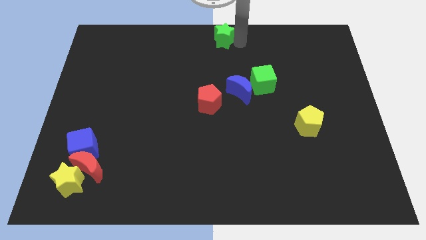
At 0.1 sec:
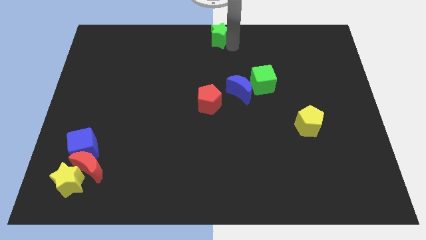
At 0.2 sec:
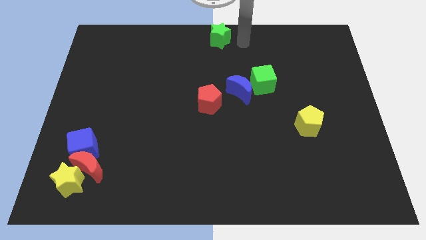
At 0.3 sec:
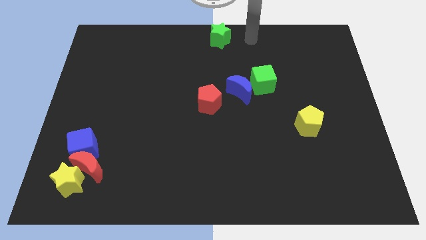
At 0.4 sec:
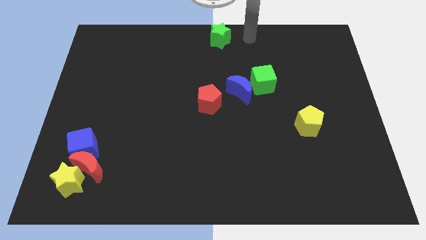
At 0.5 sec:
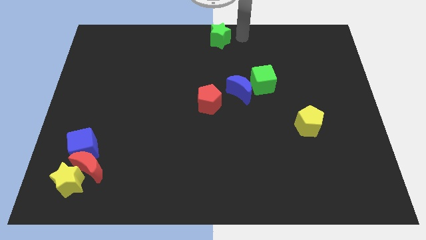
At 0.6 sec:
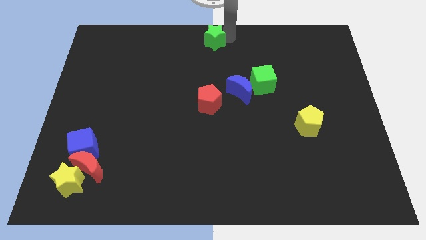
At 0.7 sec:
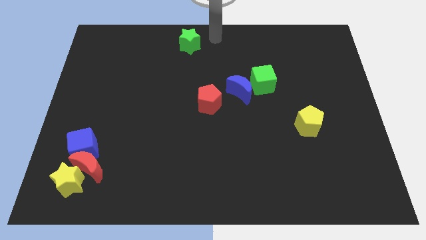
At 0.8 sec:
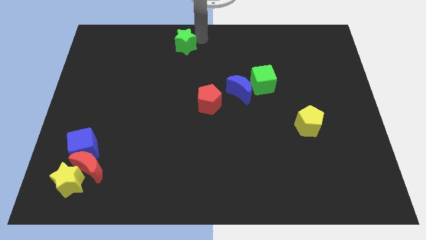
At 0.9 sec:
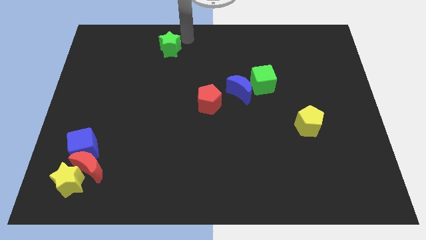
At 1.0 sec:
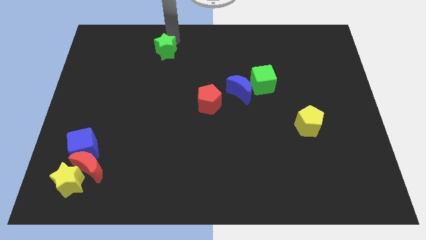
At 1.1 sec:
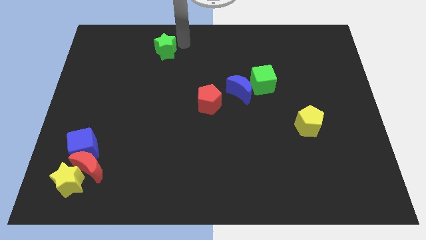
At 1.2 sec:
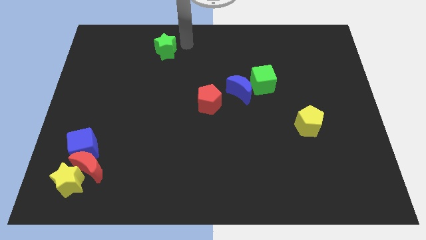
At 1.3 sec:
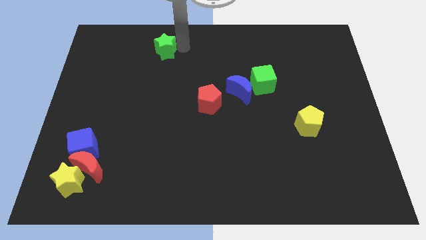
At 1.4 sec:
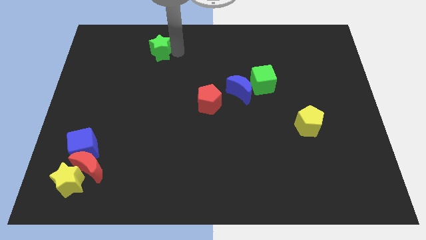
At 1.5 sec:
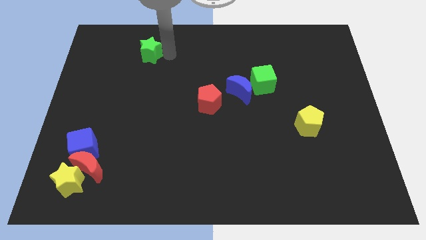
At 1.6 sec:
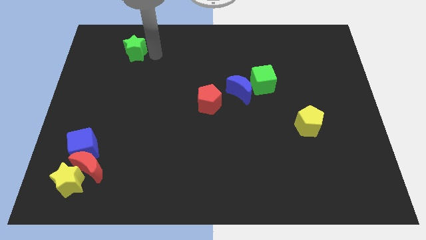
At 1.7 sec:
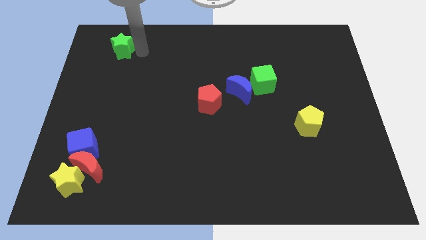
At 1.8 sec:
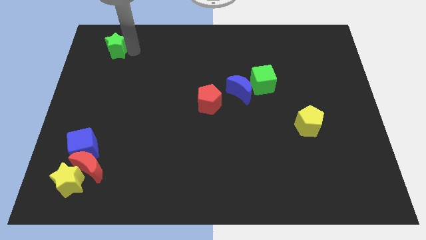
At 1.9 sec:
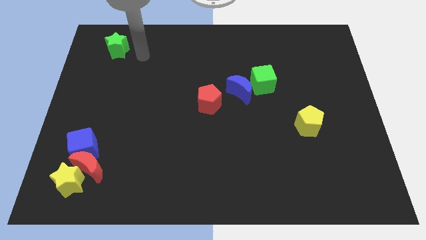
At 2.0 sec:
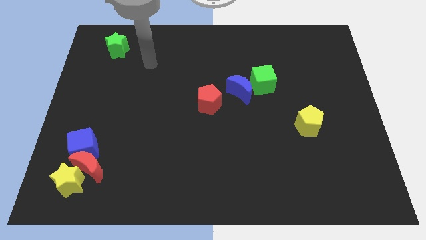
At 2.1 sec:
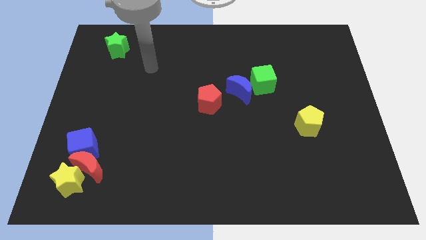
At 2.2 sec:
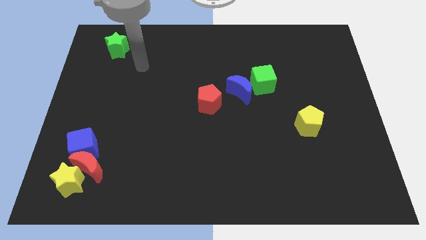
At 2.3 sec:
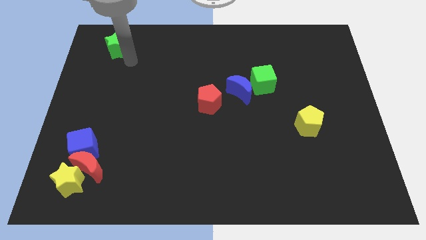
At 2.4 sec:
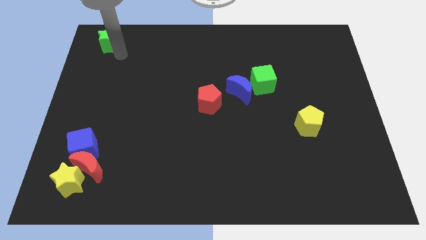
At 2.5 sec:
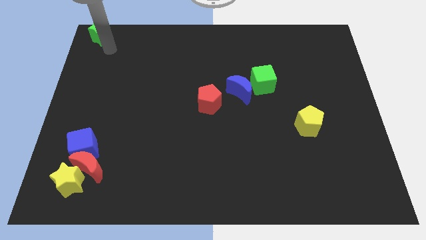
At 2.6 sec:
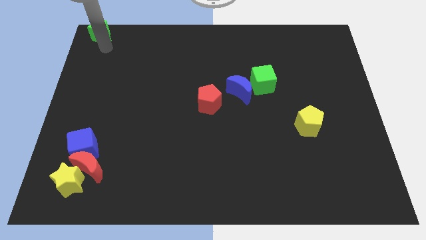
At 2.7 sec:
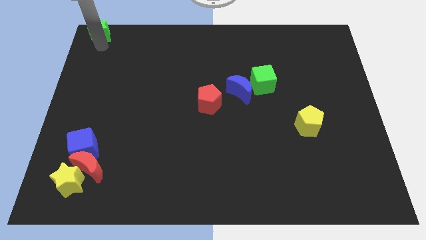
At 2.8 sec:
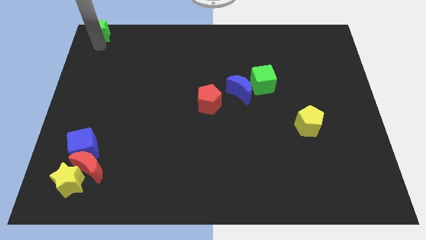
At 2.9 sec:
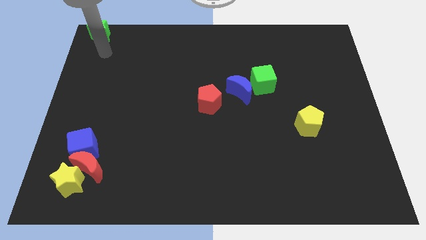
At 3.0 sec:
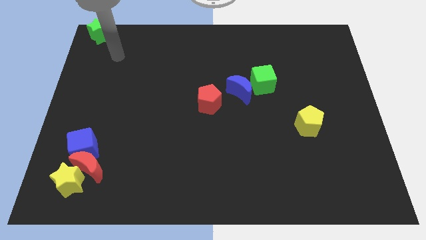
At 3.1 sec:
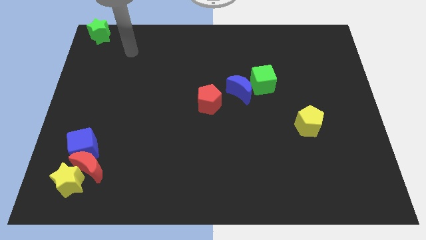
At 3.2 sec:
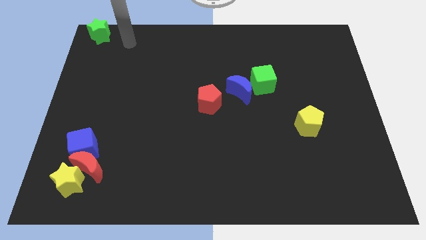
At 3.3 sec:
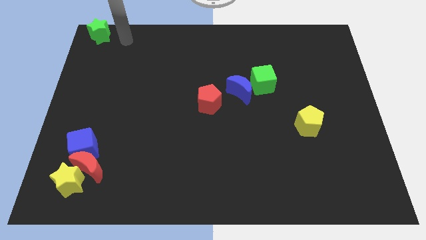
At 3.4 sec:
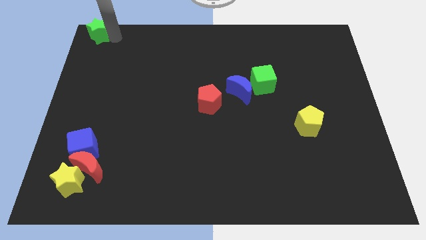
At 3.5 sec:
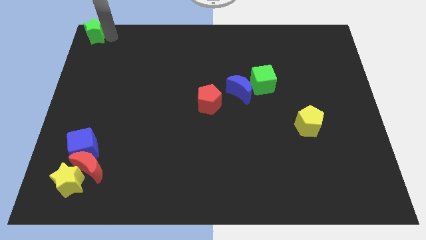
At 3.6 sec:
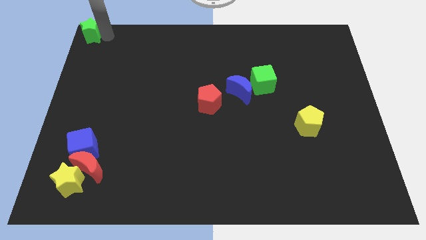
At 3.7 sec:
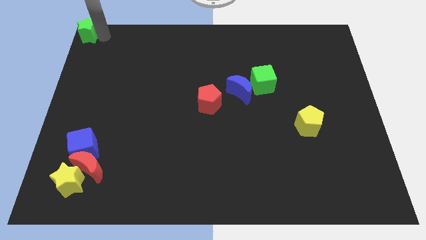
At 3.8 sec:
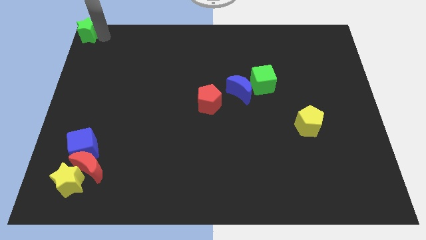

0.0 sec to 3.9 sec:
place the green star at the top left corner of the board

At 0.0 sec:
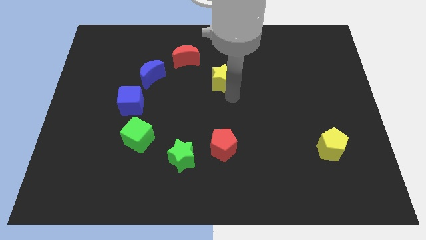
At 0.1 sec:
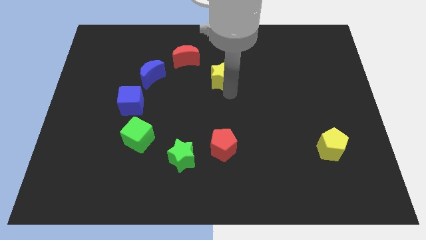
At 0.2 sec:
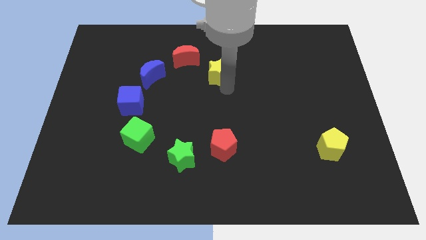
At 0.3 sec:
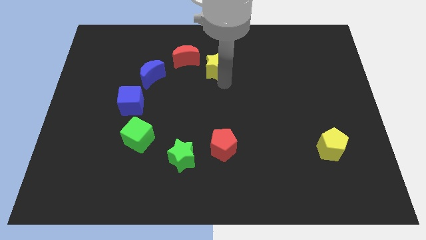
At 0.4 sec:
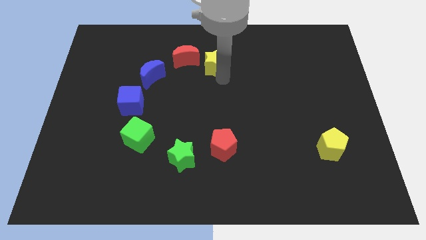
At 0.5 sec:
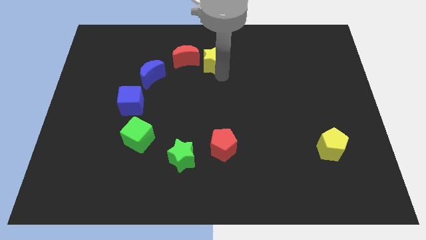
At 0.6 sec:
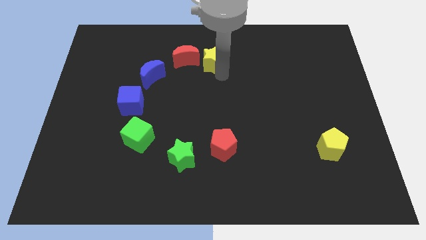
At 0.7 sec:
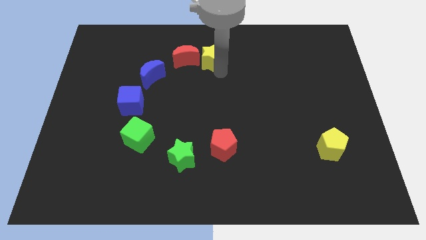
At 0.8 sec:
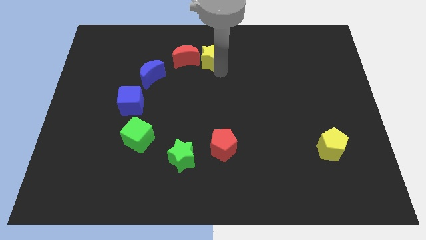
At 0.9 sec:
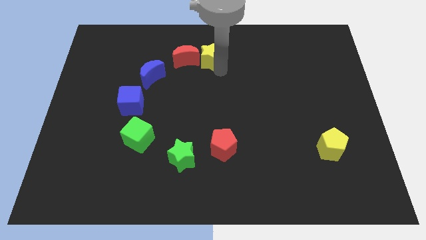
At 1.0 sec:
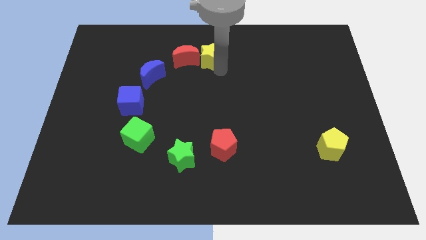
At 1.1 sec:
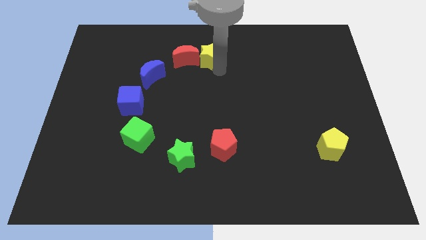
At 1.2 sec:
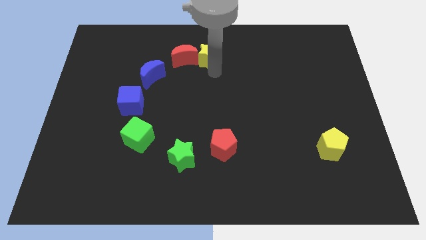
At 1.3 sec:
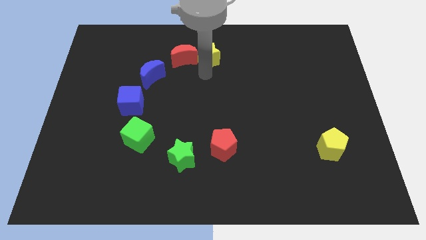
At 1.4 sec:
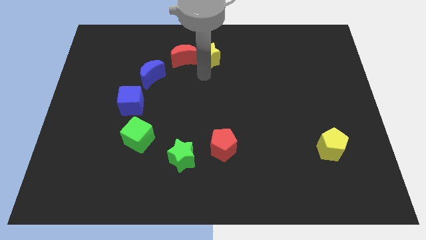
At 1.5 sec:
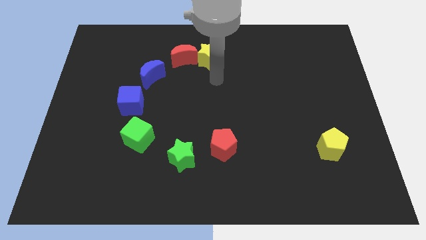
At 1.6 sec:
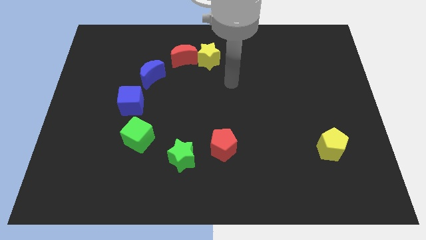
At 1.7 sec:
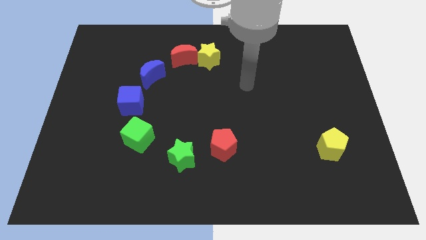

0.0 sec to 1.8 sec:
push the yellow star into the red crescent

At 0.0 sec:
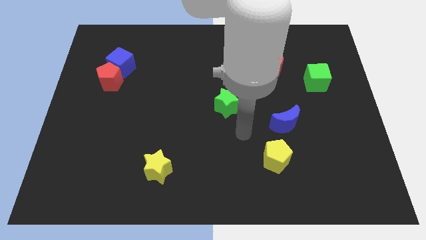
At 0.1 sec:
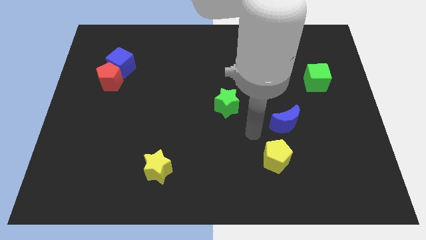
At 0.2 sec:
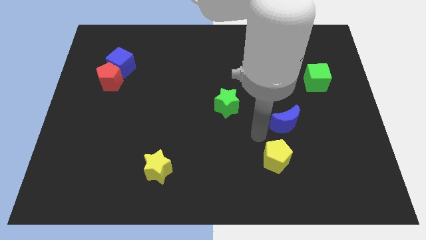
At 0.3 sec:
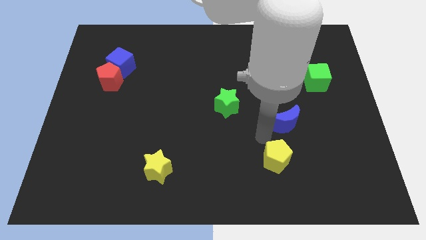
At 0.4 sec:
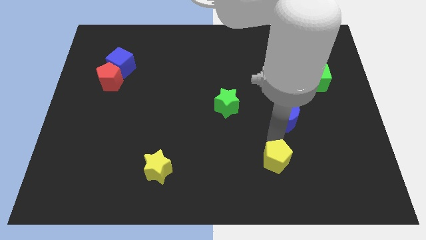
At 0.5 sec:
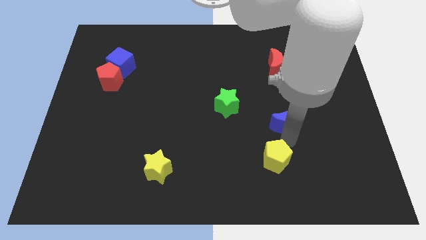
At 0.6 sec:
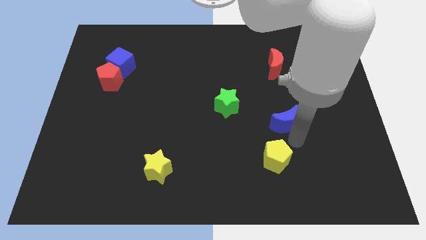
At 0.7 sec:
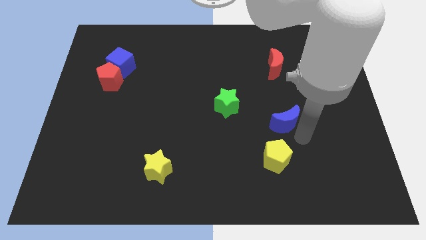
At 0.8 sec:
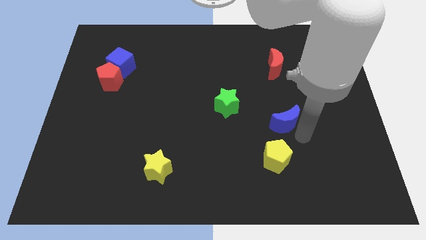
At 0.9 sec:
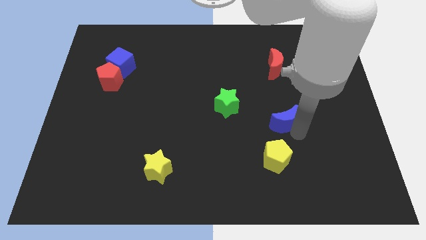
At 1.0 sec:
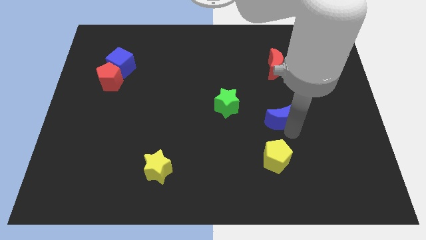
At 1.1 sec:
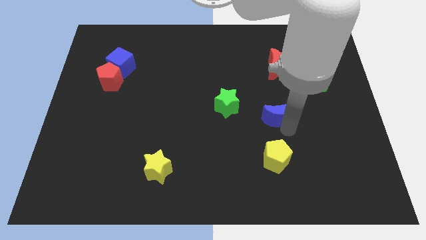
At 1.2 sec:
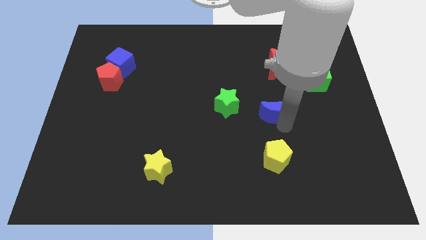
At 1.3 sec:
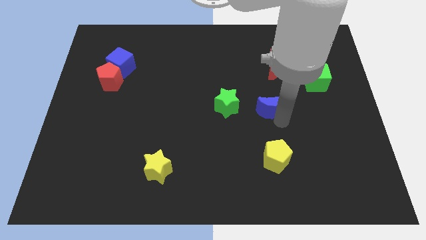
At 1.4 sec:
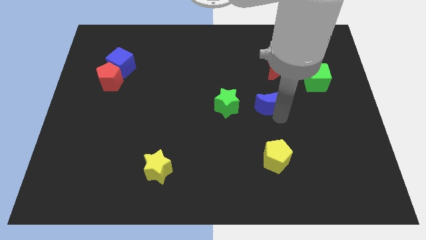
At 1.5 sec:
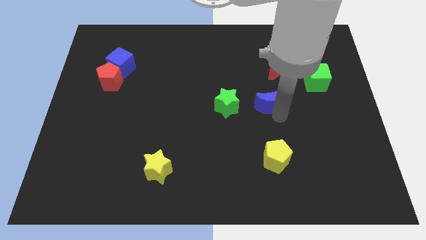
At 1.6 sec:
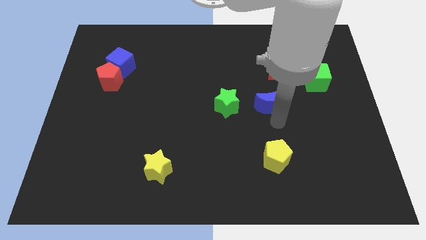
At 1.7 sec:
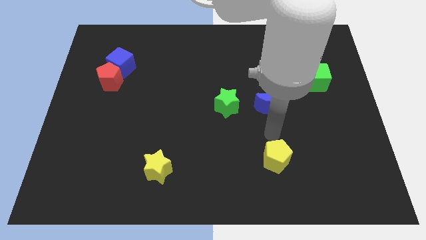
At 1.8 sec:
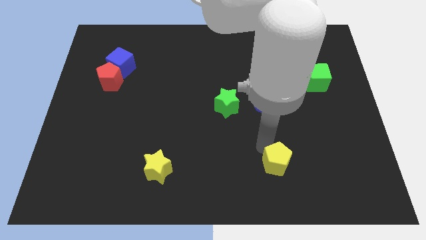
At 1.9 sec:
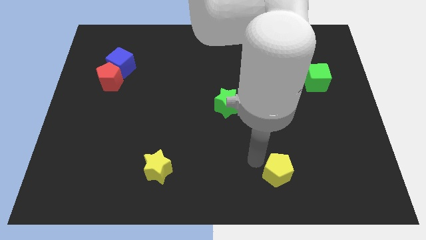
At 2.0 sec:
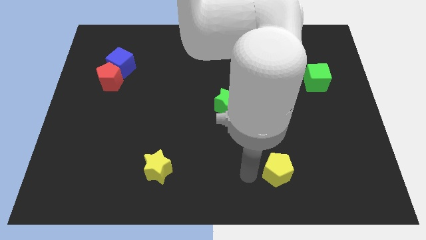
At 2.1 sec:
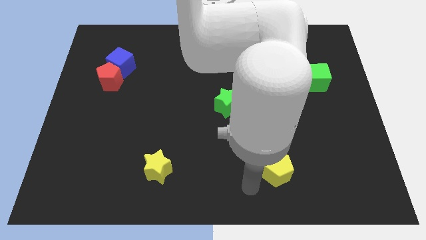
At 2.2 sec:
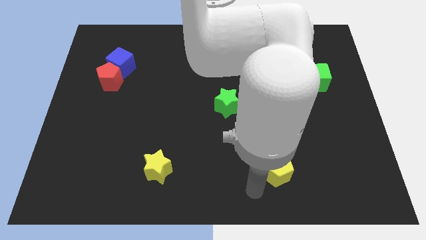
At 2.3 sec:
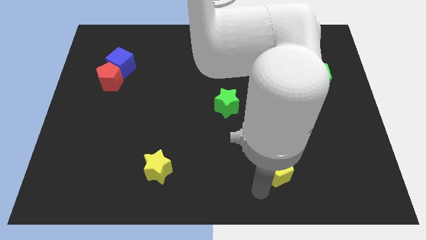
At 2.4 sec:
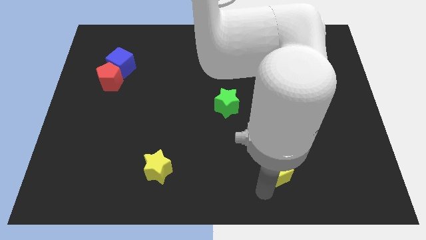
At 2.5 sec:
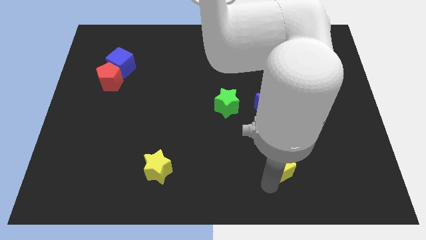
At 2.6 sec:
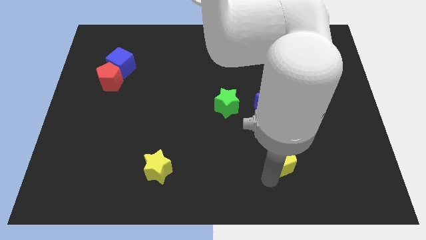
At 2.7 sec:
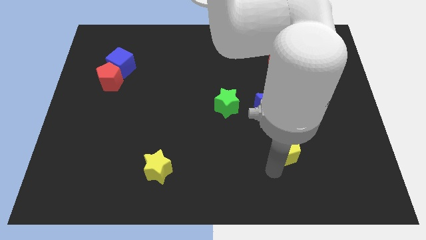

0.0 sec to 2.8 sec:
push blue crescent beside green star

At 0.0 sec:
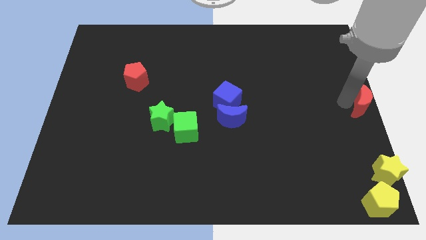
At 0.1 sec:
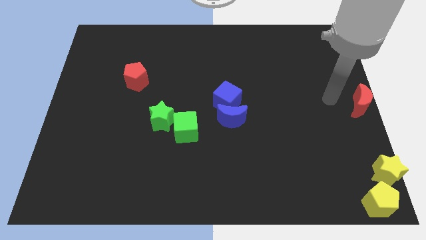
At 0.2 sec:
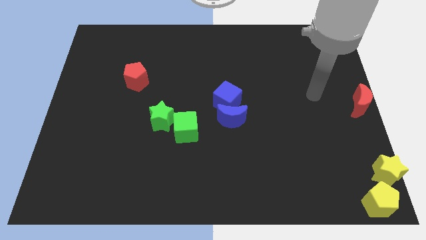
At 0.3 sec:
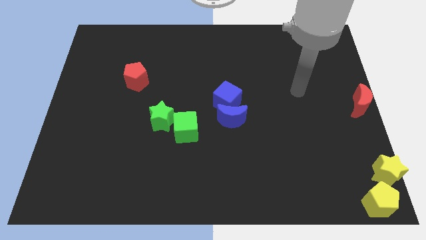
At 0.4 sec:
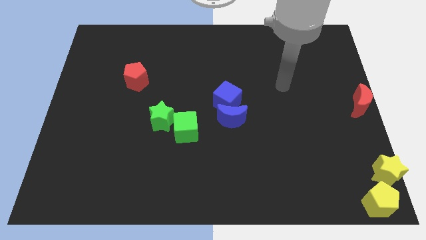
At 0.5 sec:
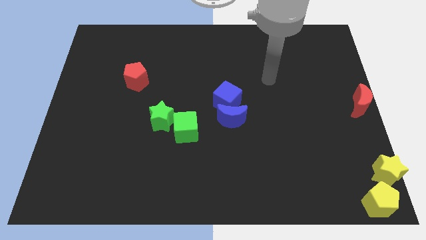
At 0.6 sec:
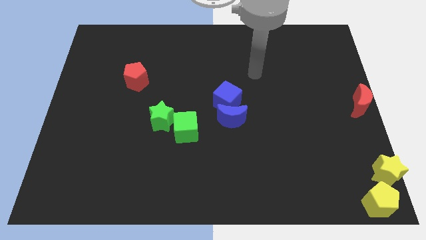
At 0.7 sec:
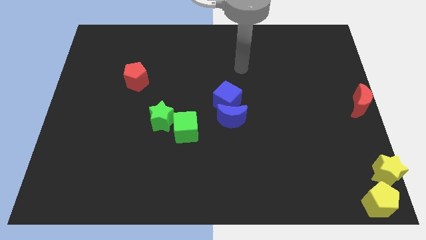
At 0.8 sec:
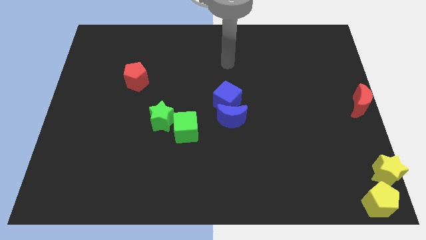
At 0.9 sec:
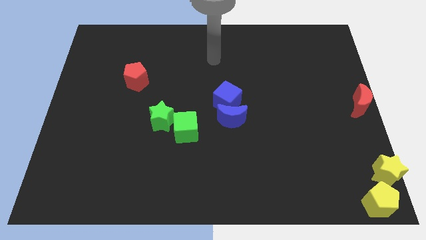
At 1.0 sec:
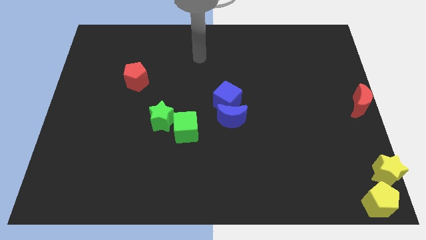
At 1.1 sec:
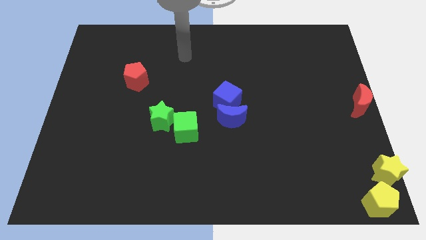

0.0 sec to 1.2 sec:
move your arm away from the red moon
